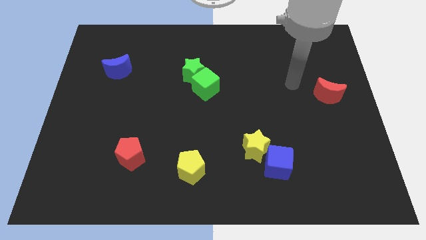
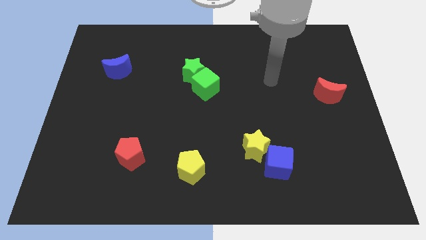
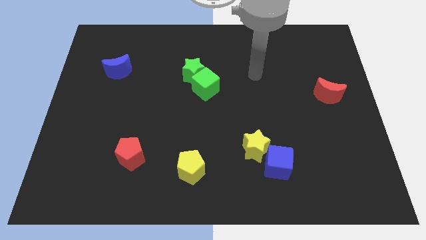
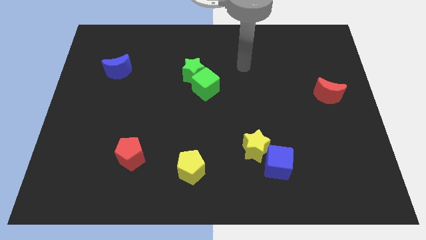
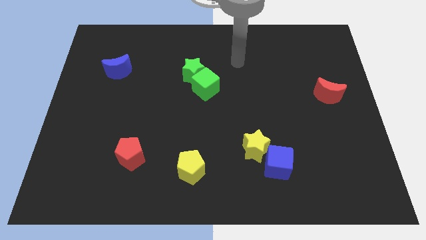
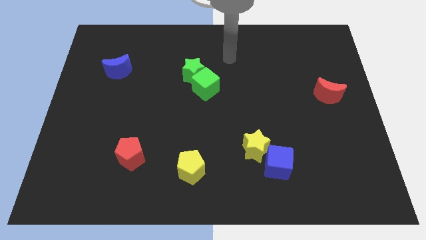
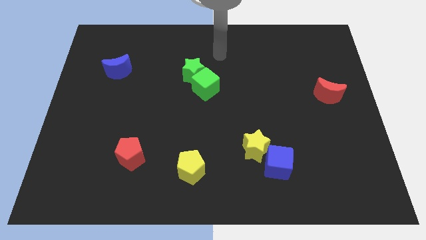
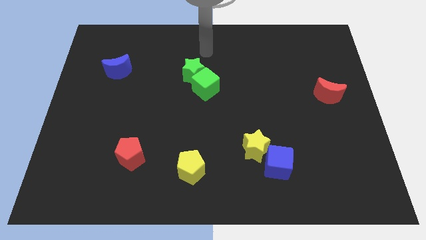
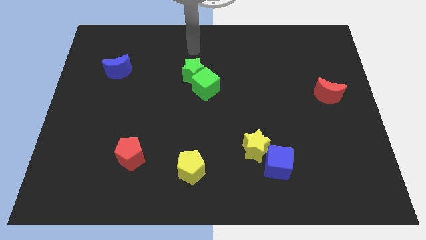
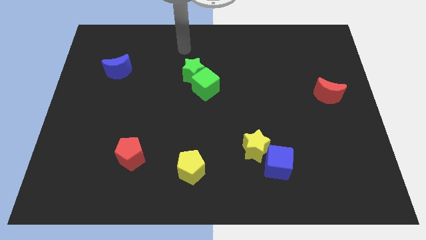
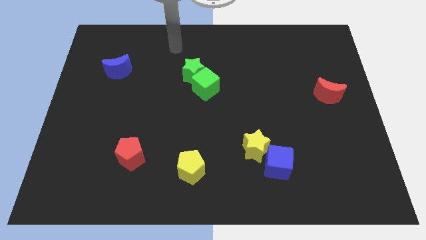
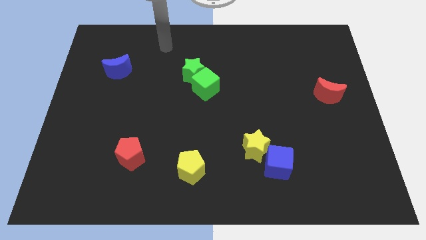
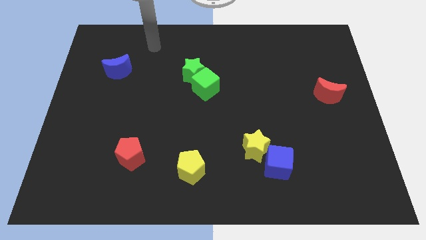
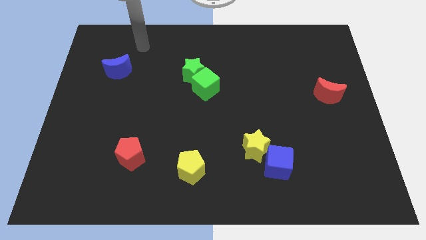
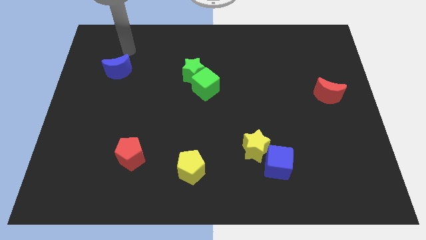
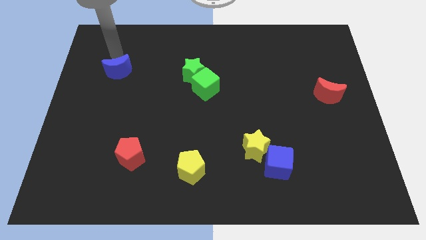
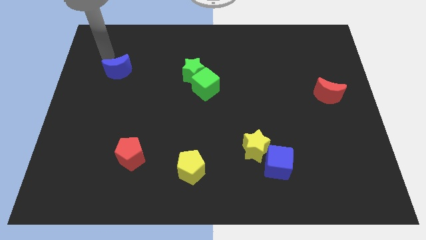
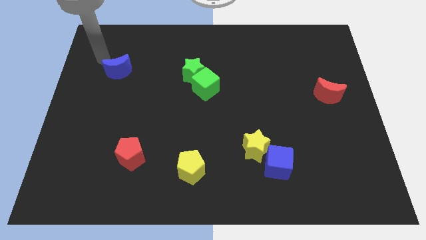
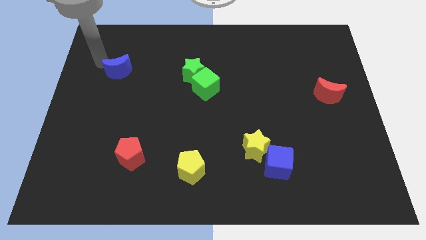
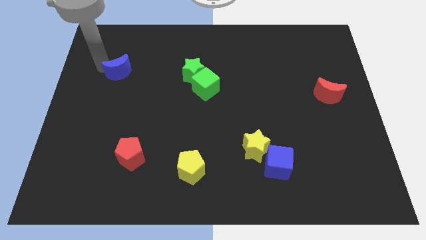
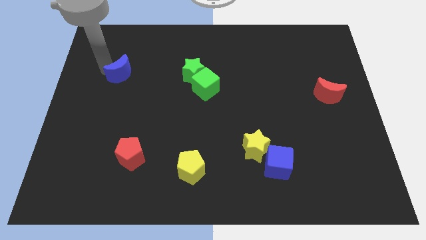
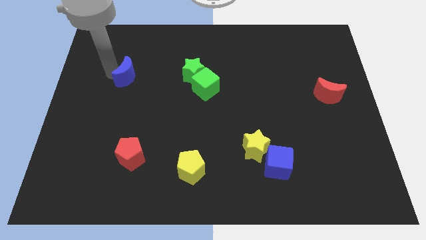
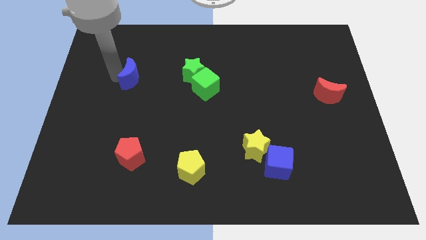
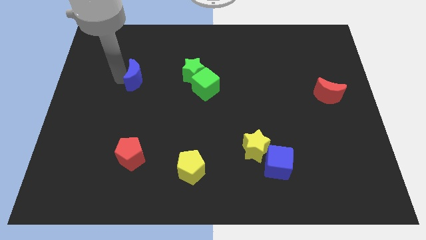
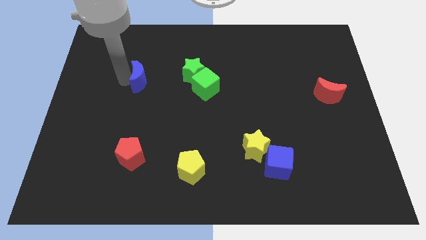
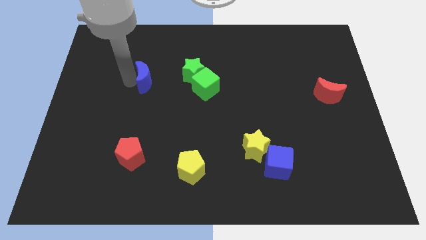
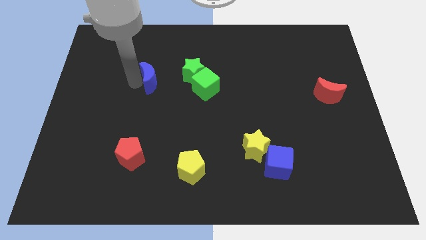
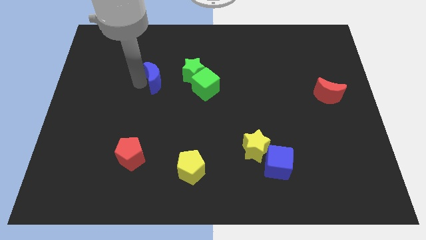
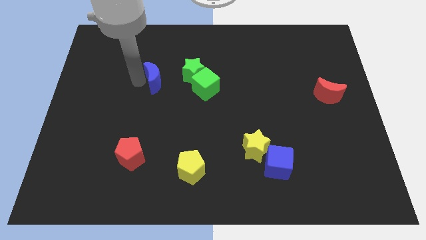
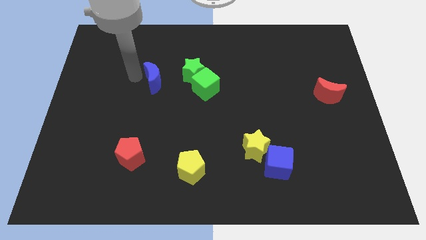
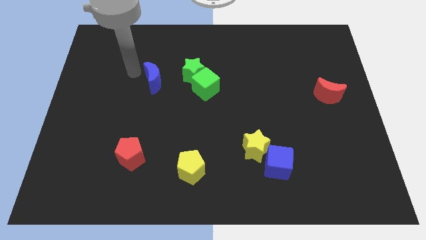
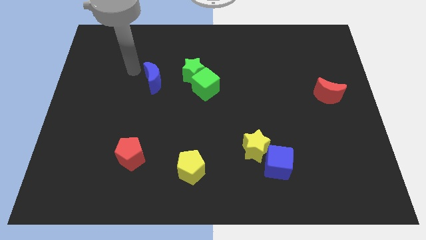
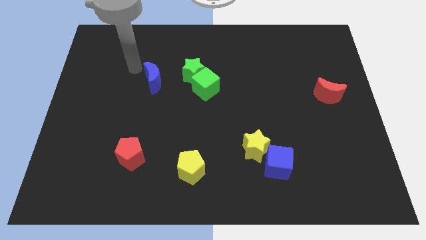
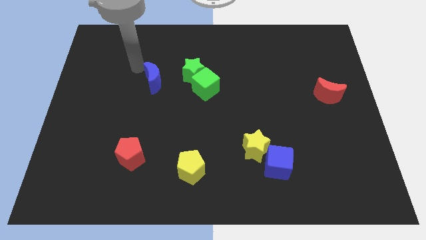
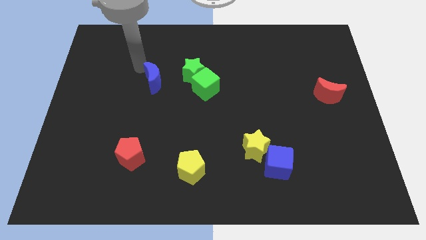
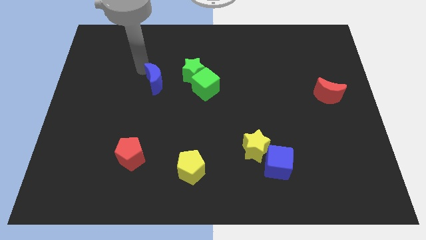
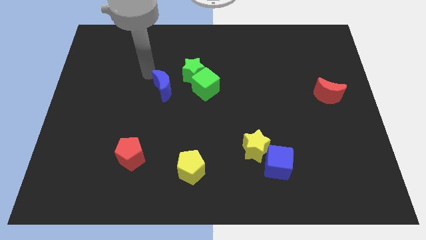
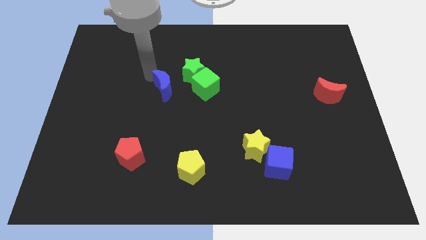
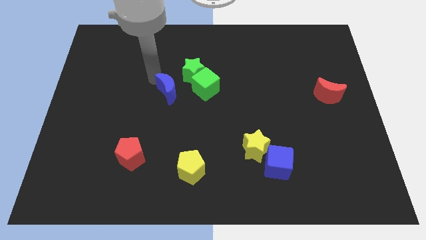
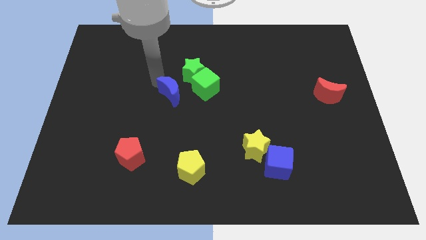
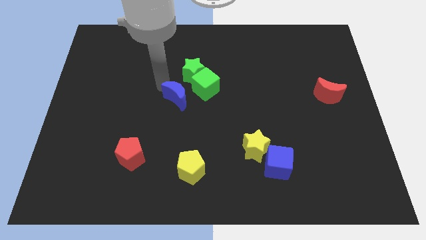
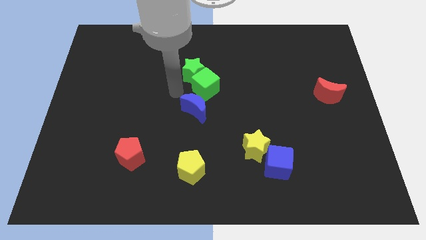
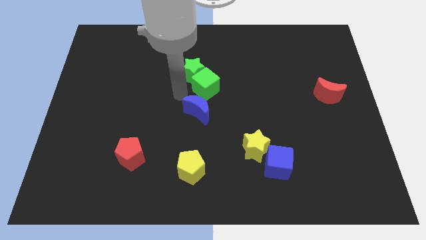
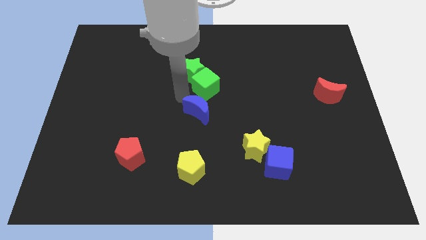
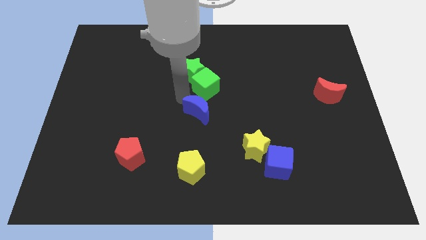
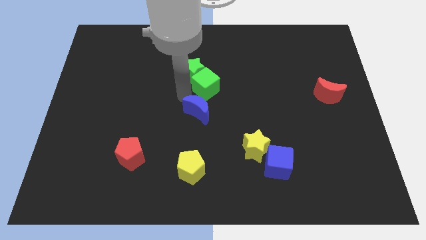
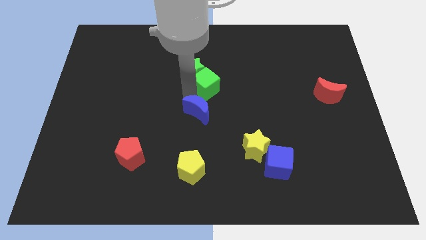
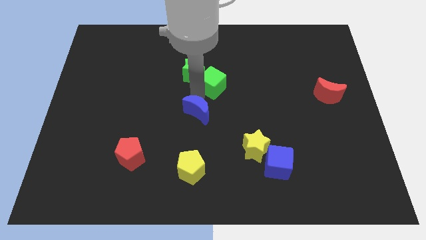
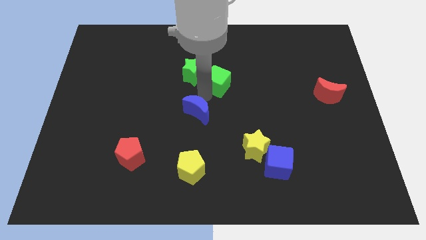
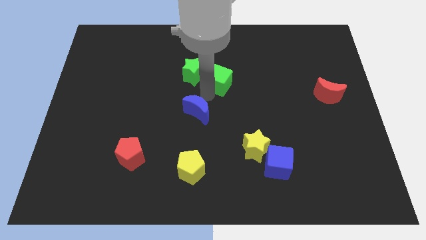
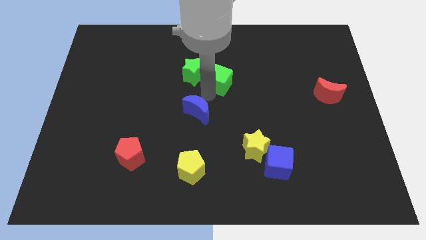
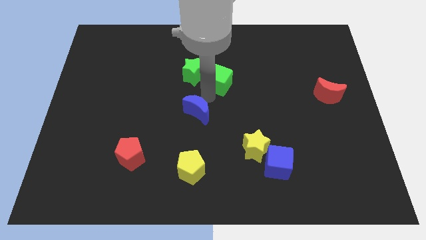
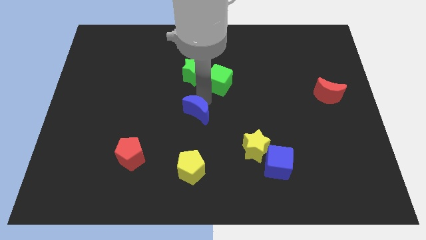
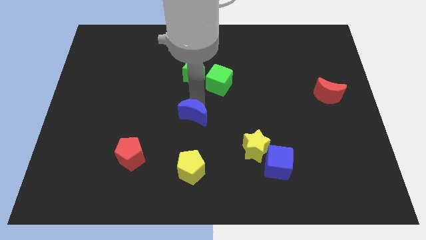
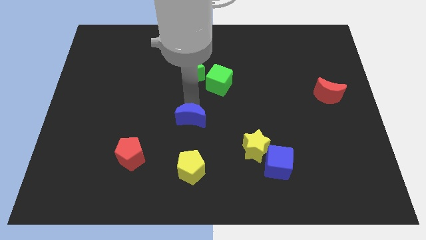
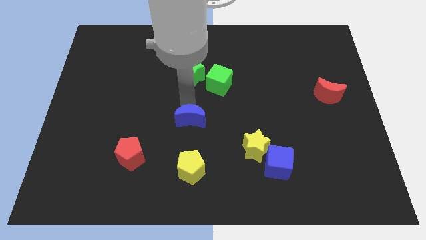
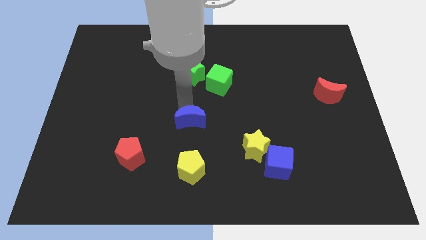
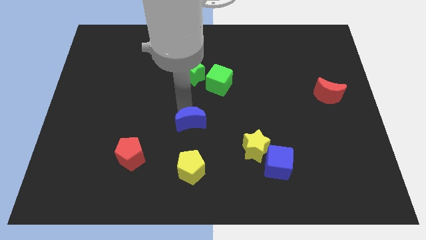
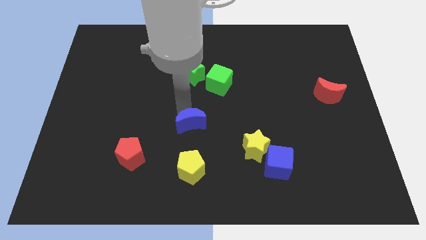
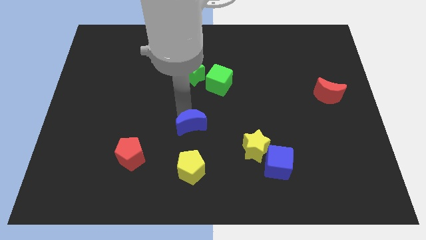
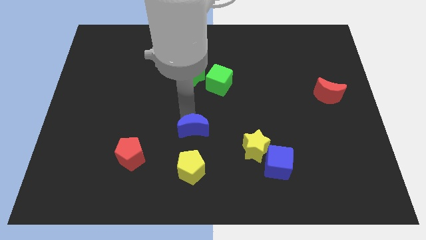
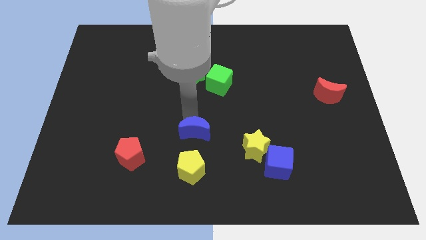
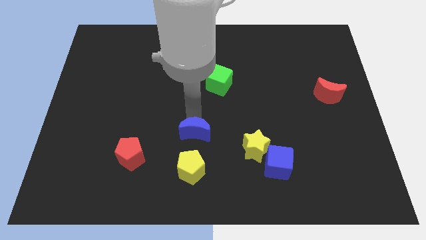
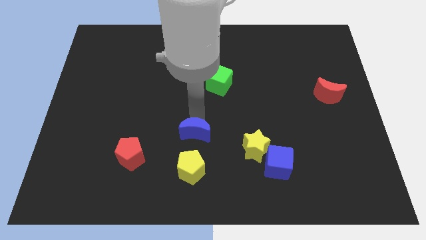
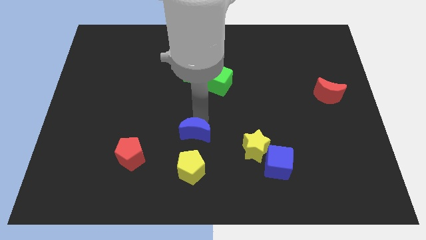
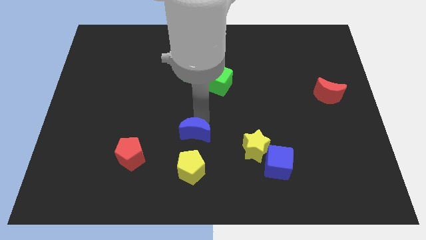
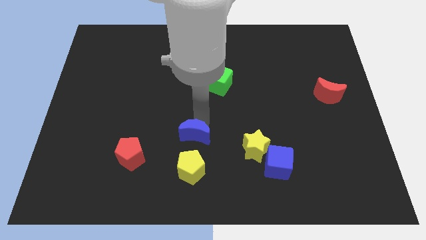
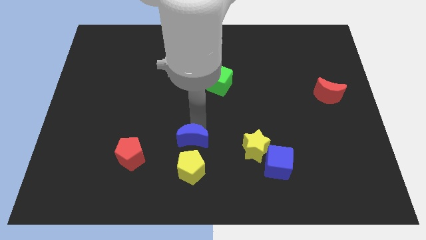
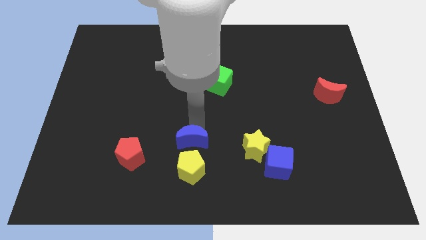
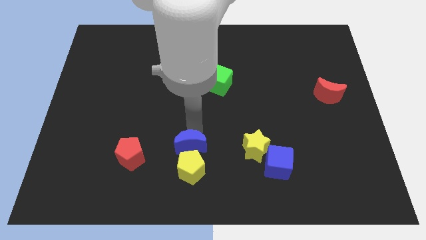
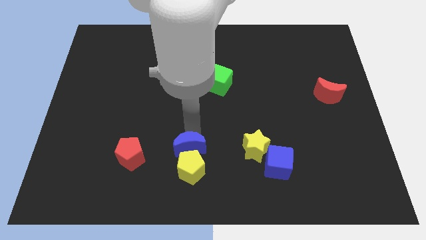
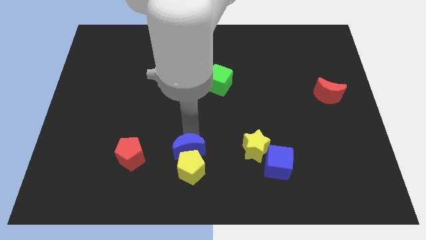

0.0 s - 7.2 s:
slide the blue moon next to the yellow pentagon

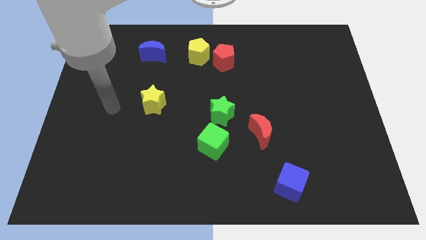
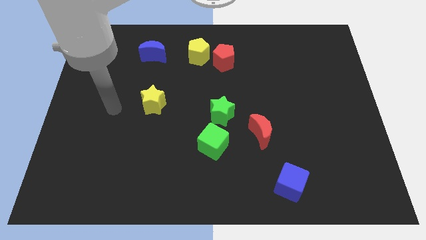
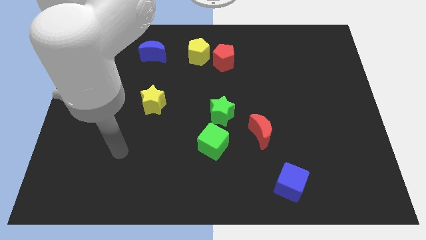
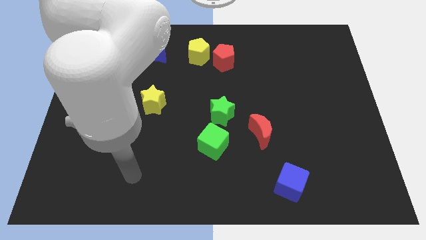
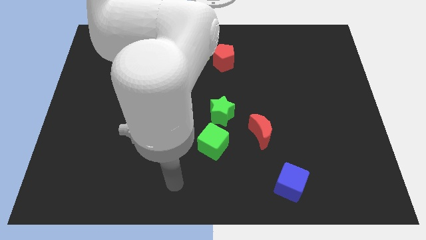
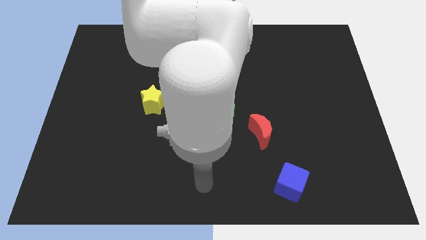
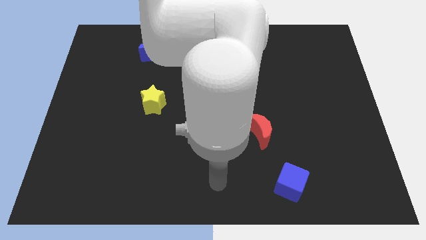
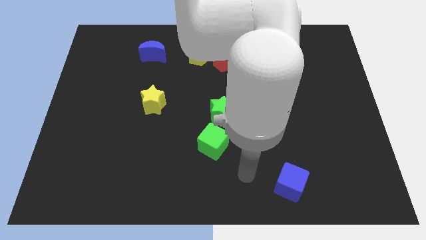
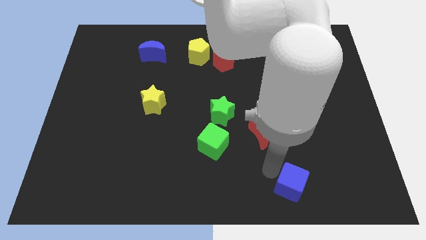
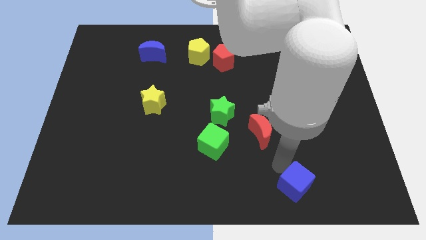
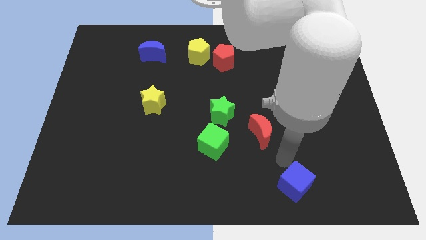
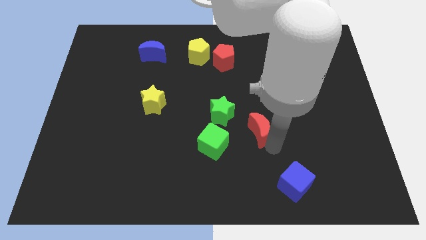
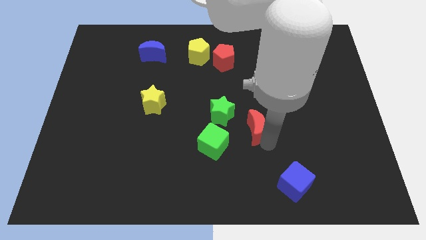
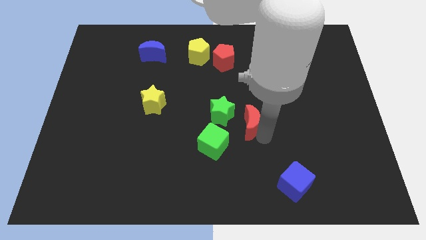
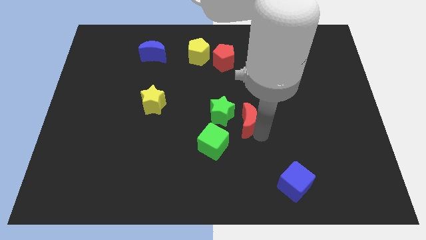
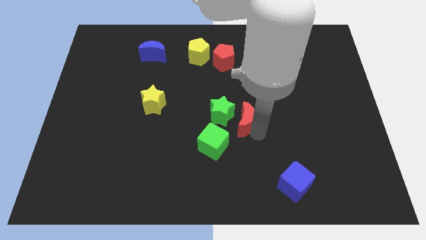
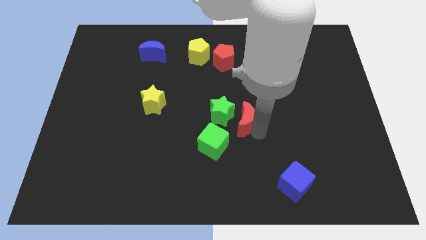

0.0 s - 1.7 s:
move the red moon next to the green star
